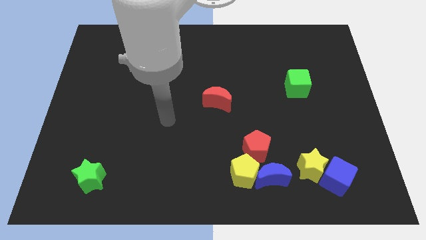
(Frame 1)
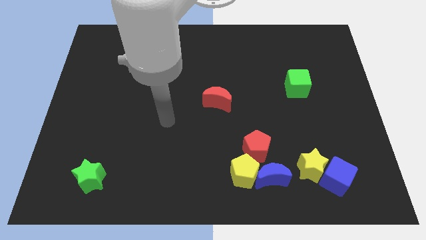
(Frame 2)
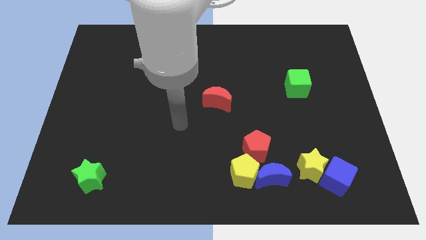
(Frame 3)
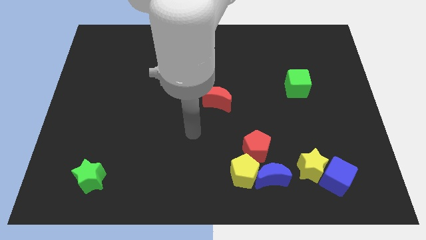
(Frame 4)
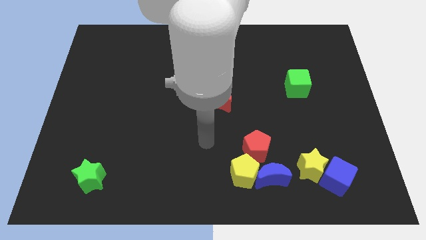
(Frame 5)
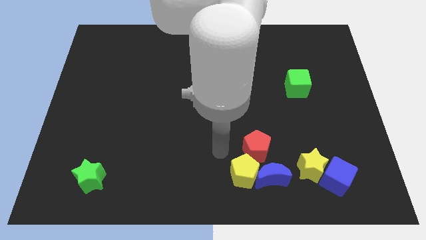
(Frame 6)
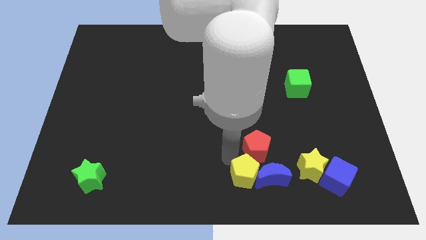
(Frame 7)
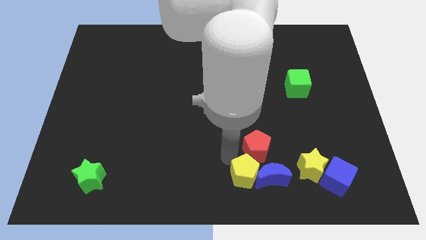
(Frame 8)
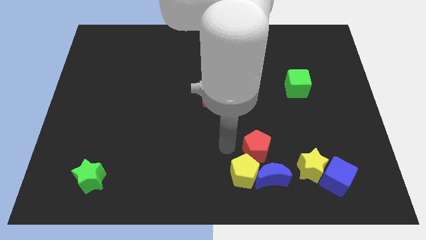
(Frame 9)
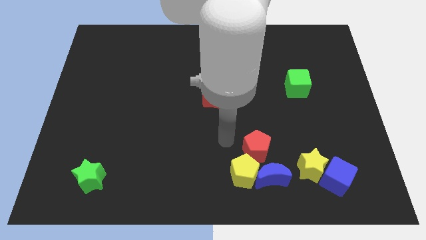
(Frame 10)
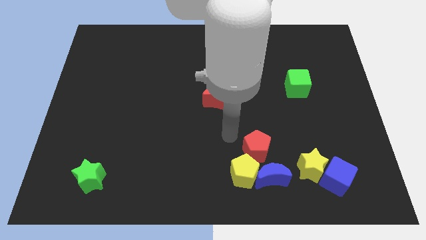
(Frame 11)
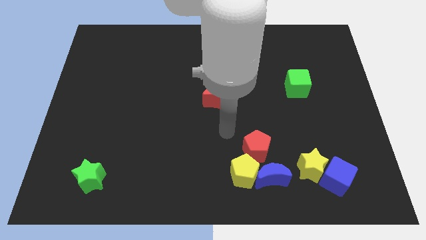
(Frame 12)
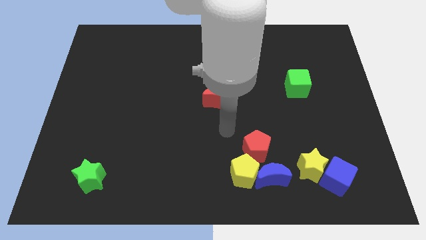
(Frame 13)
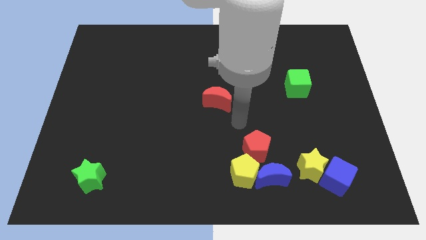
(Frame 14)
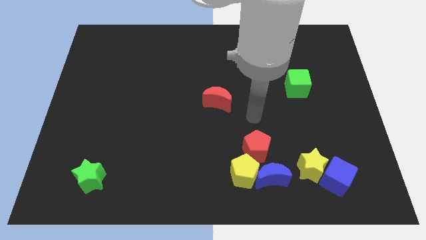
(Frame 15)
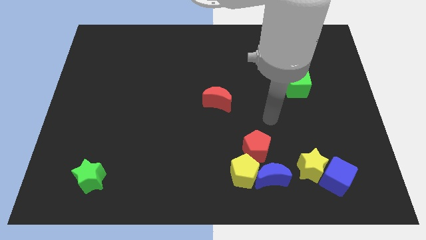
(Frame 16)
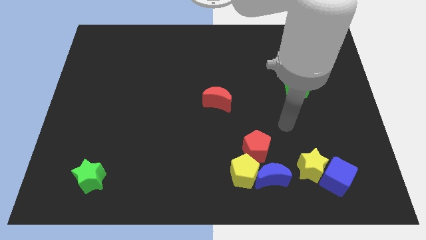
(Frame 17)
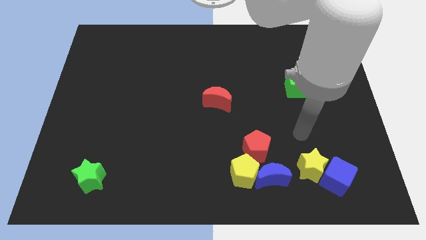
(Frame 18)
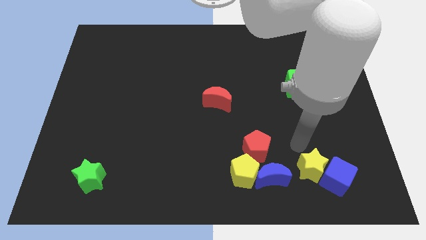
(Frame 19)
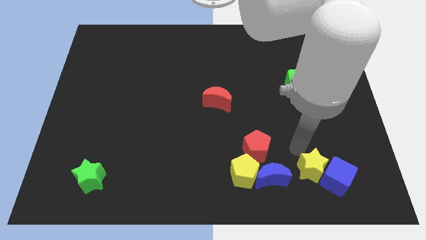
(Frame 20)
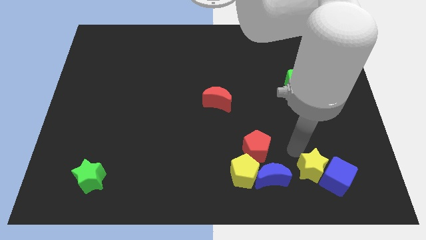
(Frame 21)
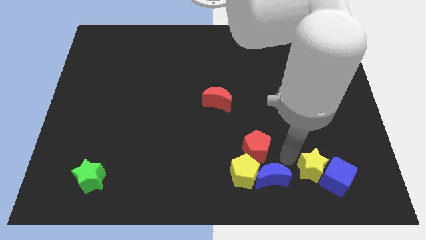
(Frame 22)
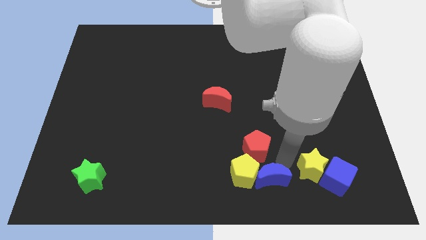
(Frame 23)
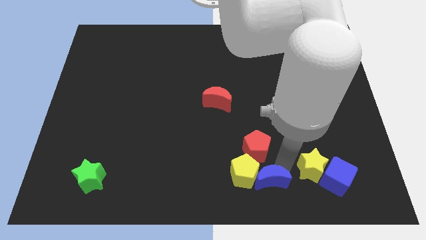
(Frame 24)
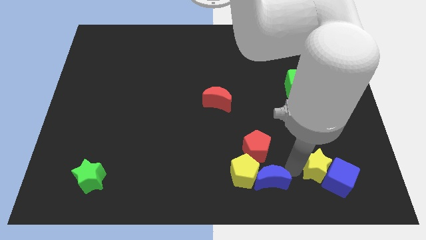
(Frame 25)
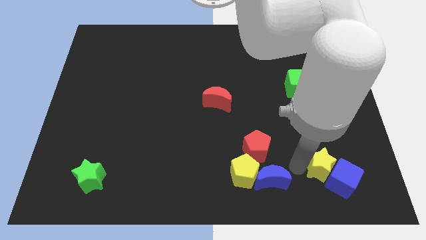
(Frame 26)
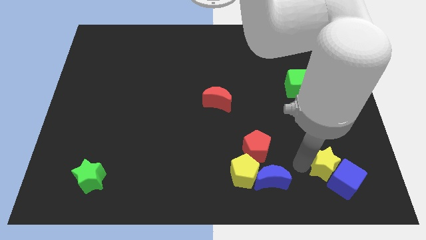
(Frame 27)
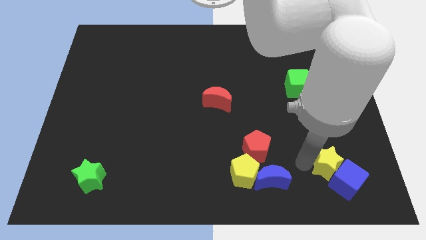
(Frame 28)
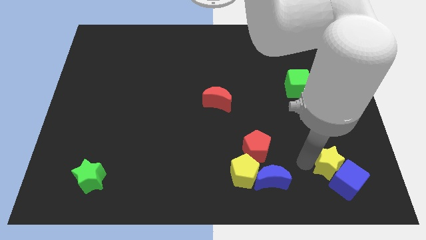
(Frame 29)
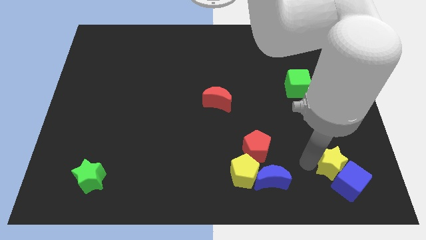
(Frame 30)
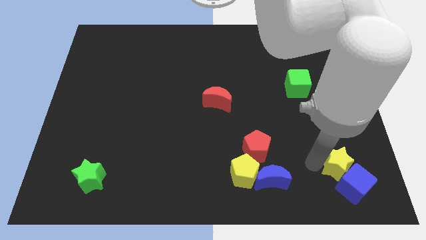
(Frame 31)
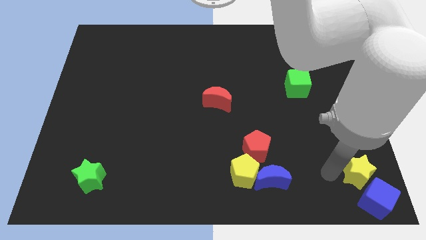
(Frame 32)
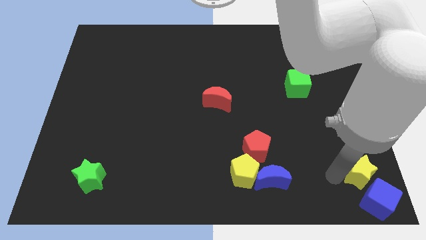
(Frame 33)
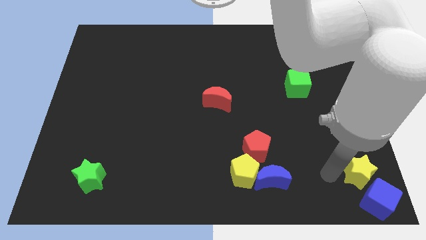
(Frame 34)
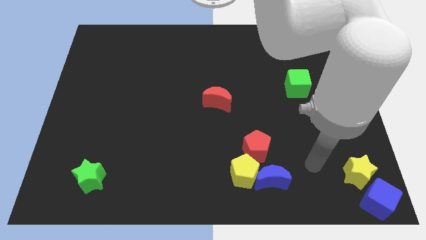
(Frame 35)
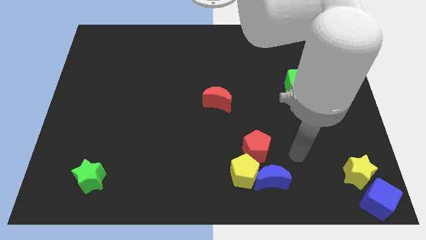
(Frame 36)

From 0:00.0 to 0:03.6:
place the yellow star horizontally to the right side of the blue crescent

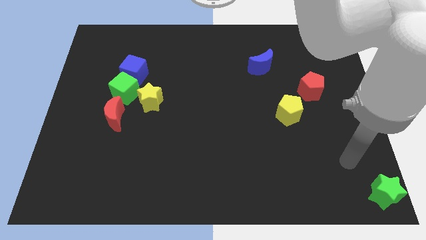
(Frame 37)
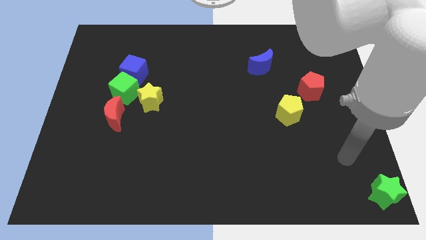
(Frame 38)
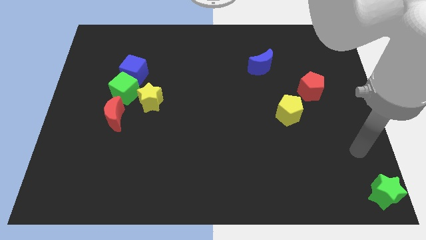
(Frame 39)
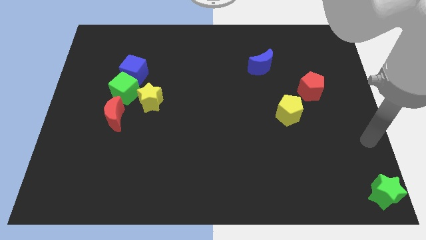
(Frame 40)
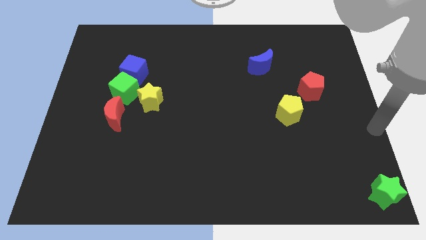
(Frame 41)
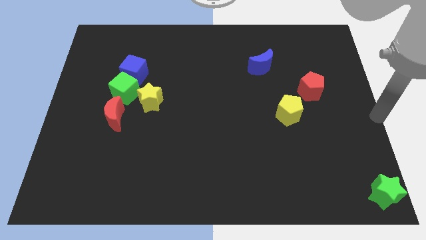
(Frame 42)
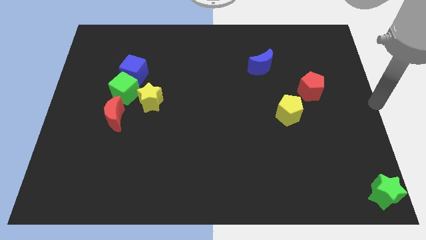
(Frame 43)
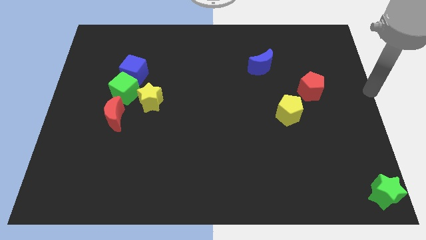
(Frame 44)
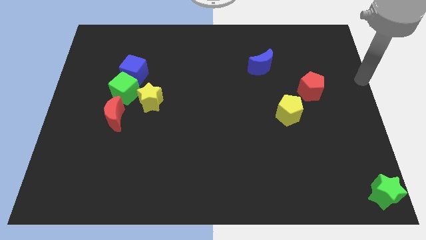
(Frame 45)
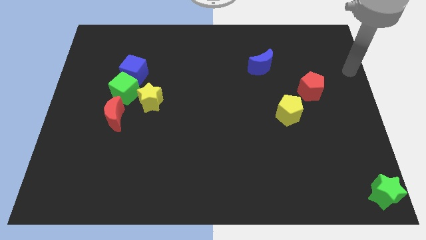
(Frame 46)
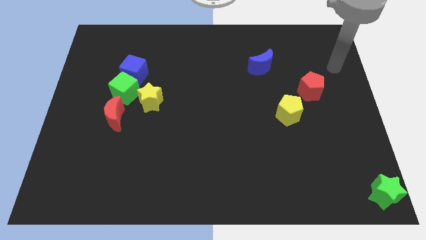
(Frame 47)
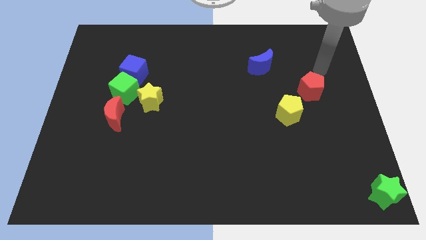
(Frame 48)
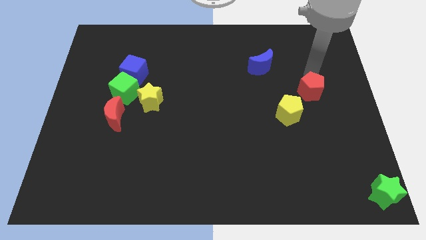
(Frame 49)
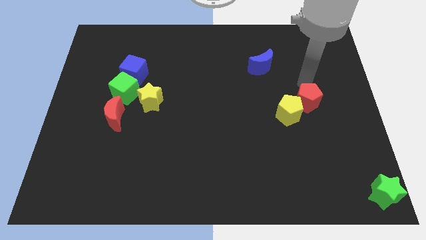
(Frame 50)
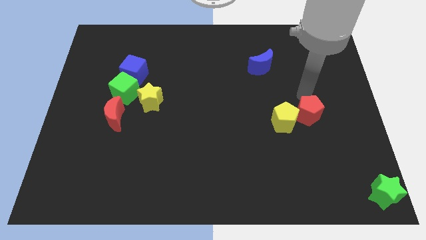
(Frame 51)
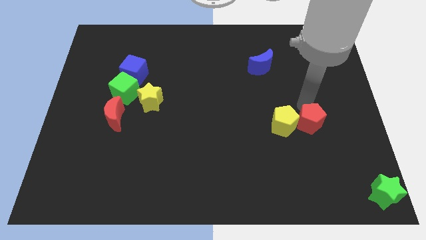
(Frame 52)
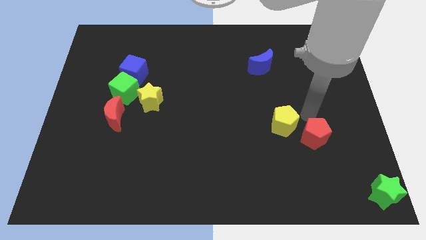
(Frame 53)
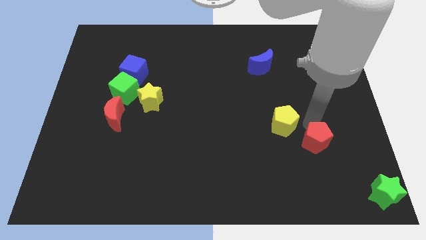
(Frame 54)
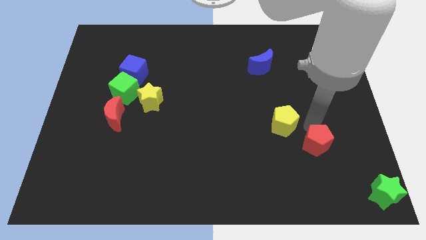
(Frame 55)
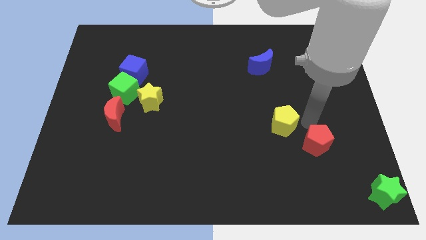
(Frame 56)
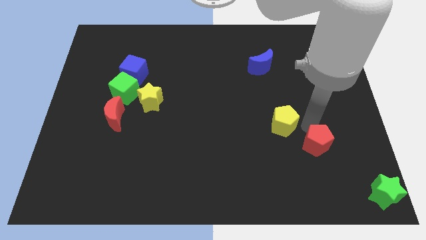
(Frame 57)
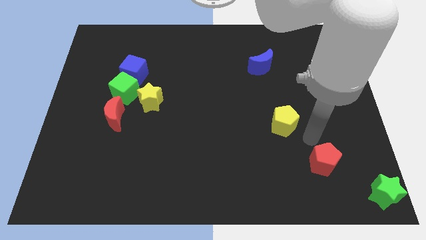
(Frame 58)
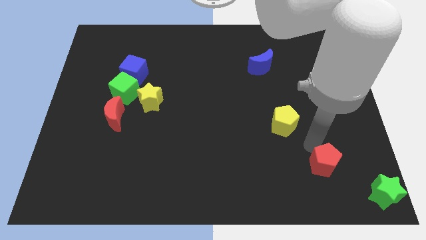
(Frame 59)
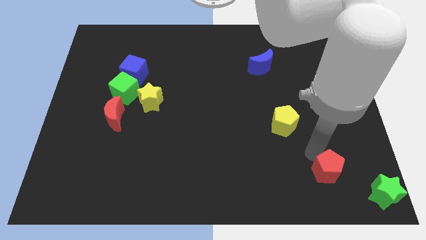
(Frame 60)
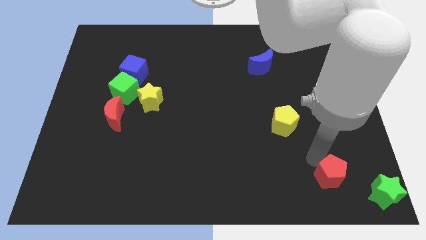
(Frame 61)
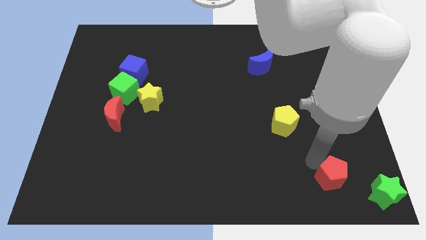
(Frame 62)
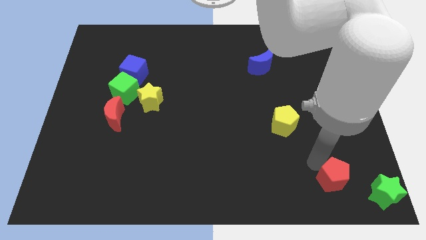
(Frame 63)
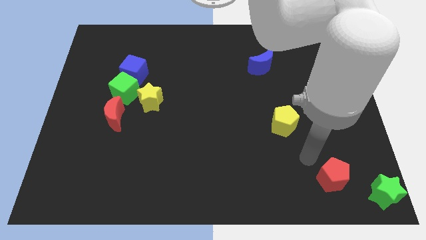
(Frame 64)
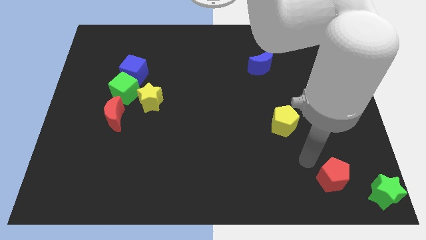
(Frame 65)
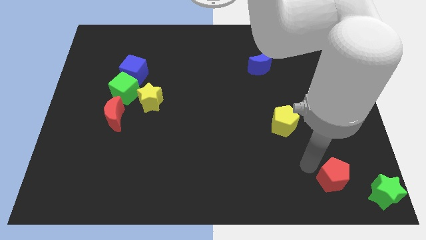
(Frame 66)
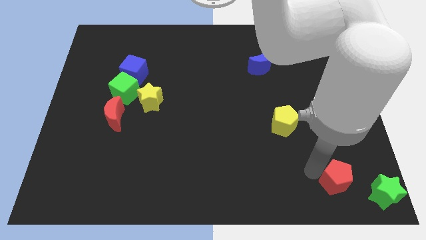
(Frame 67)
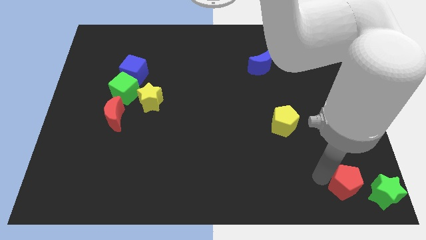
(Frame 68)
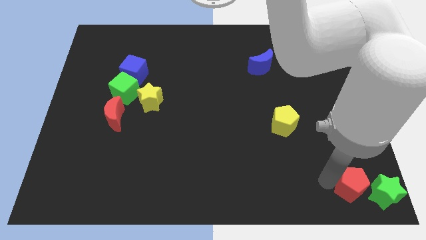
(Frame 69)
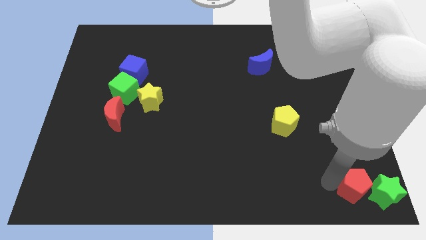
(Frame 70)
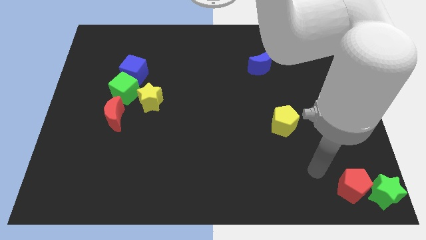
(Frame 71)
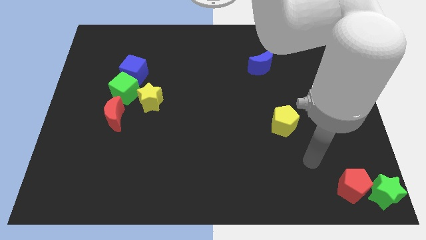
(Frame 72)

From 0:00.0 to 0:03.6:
place the red pentagon towards the green star

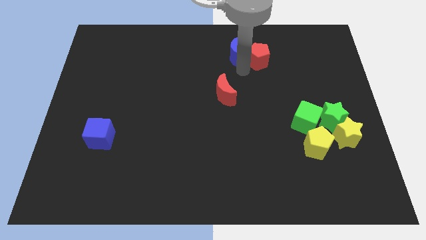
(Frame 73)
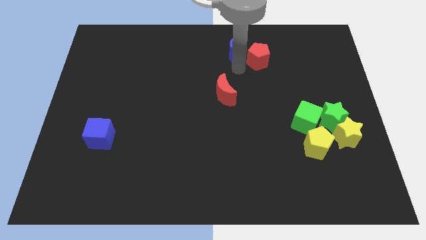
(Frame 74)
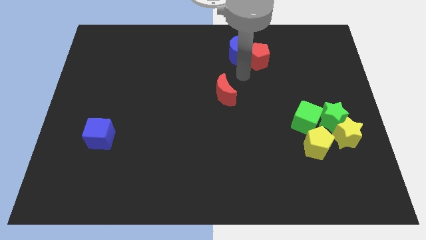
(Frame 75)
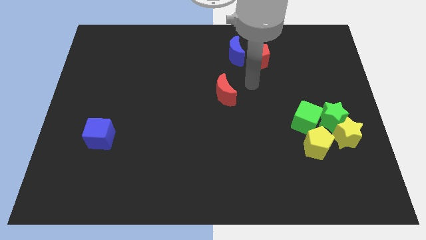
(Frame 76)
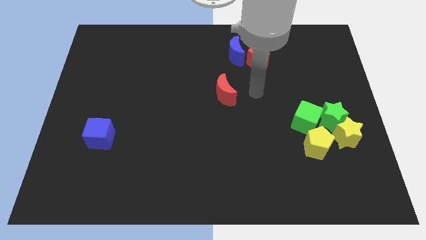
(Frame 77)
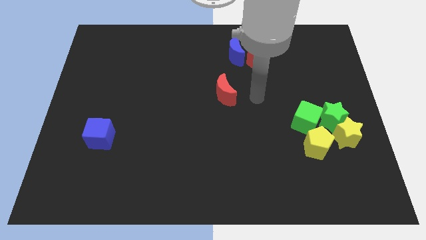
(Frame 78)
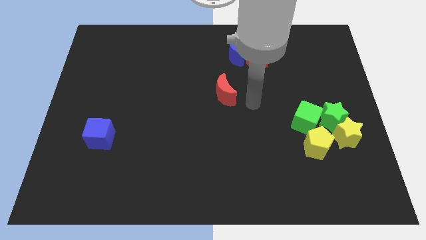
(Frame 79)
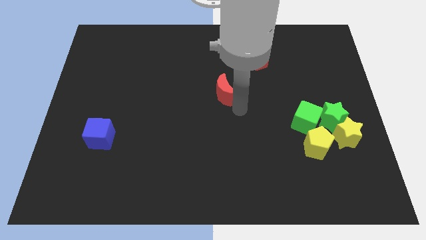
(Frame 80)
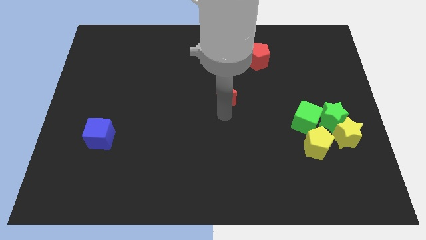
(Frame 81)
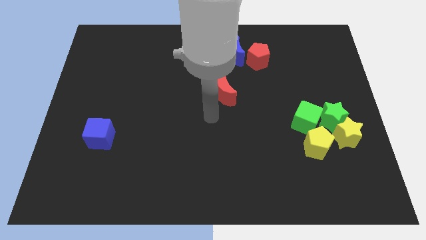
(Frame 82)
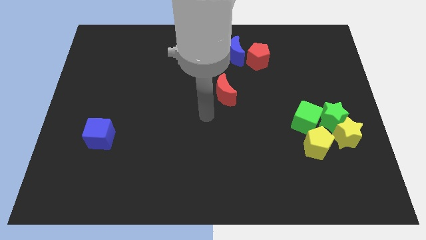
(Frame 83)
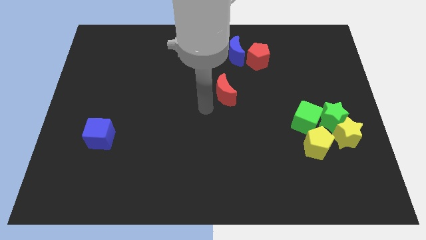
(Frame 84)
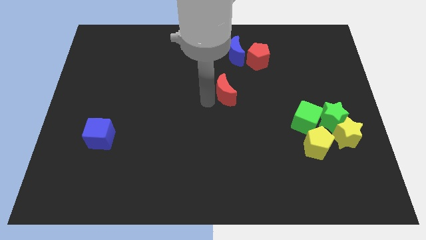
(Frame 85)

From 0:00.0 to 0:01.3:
go to the left side of the red crescent

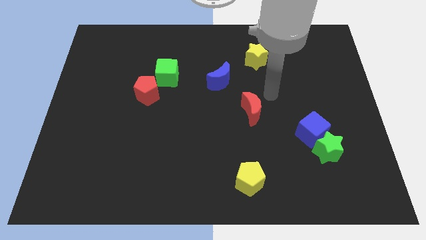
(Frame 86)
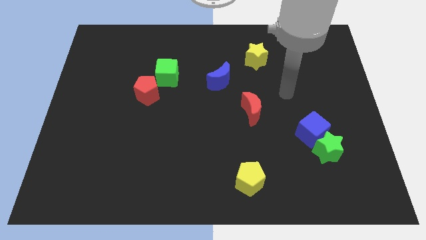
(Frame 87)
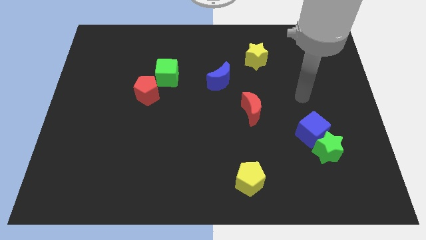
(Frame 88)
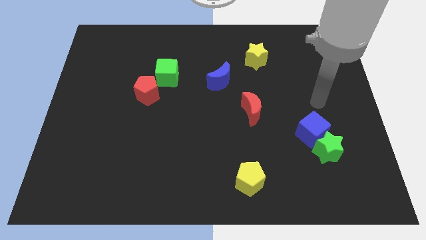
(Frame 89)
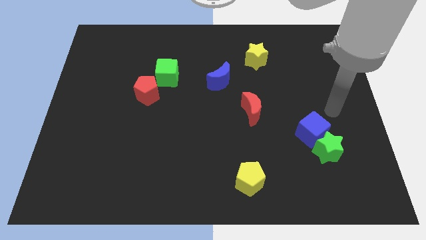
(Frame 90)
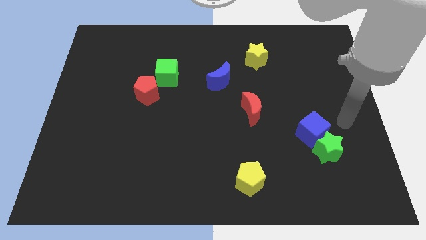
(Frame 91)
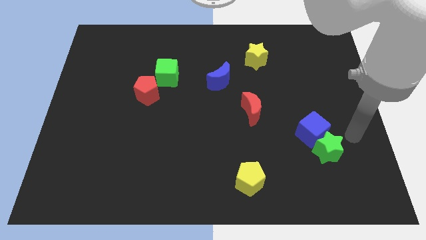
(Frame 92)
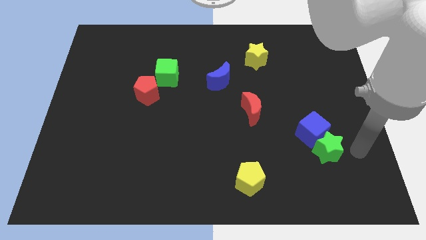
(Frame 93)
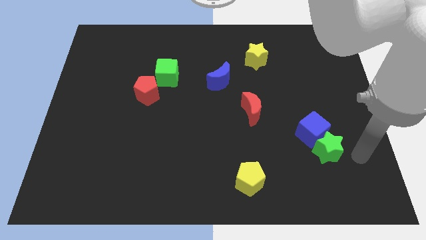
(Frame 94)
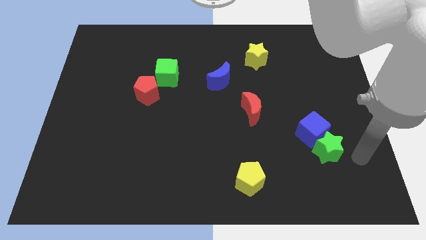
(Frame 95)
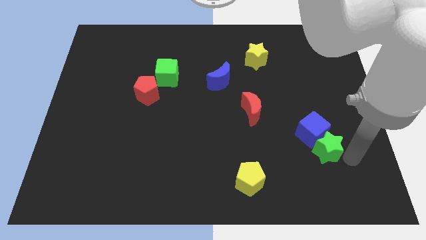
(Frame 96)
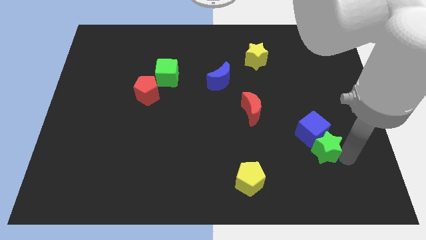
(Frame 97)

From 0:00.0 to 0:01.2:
place your arm to the right of green star
